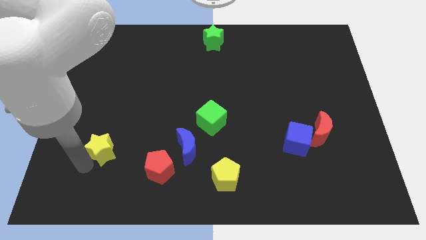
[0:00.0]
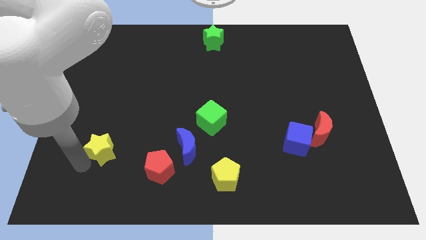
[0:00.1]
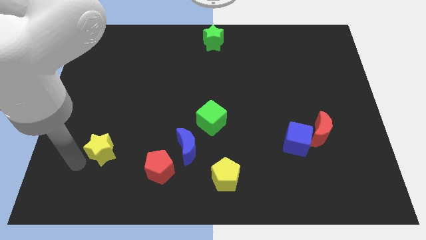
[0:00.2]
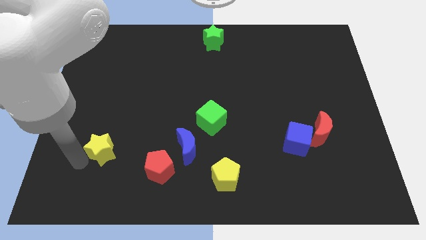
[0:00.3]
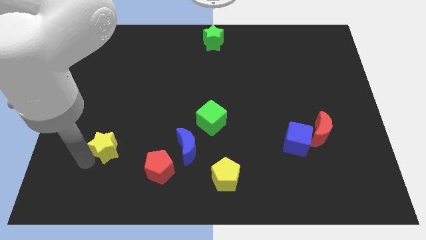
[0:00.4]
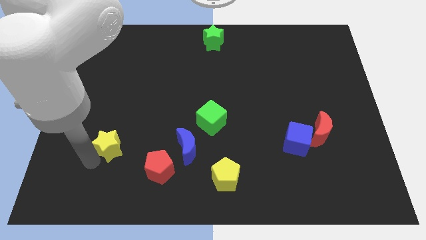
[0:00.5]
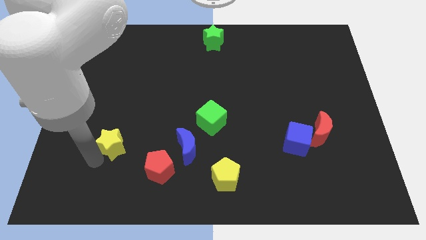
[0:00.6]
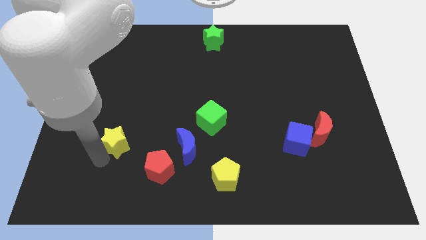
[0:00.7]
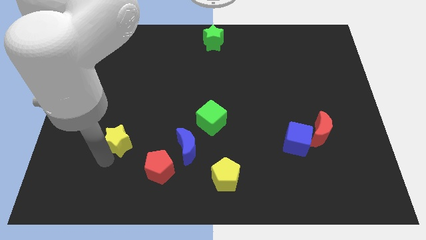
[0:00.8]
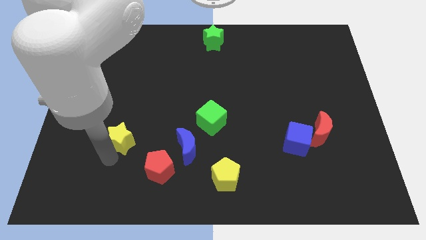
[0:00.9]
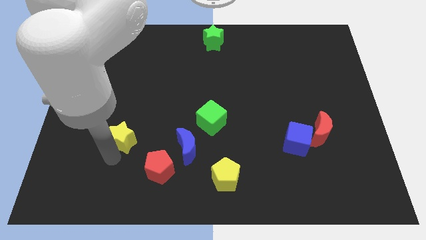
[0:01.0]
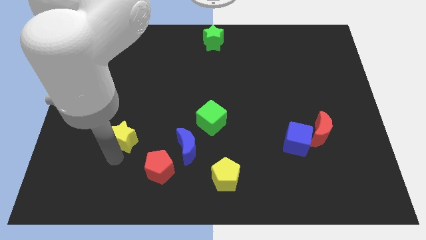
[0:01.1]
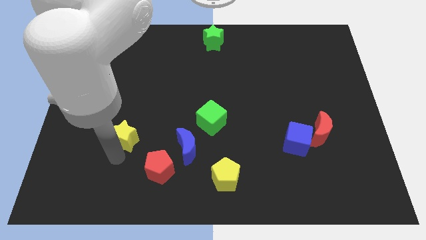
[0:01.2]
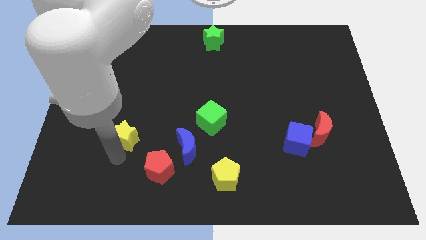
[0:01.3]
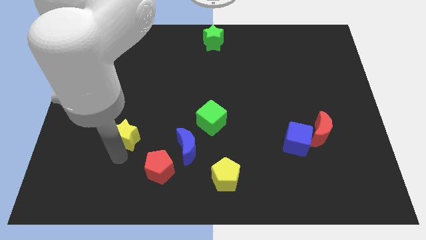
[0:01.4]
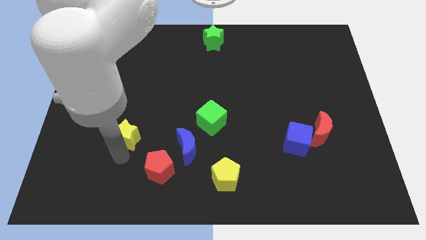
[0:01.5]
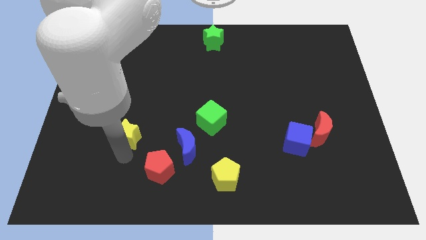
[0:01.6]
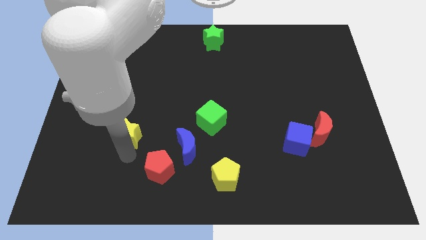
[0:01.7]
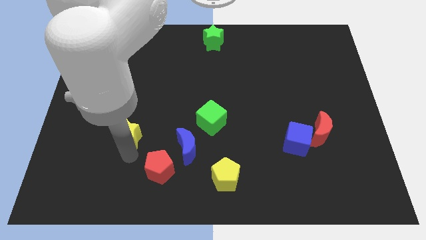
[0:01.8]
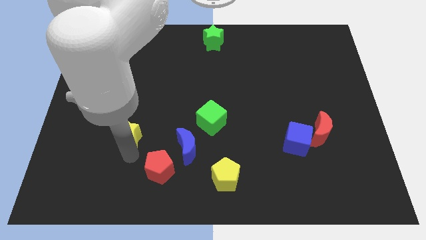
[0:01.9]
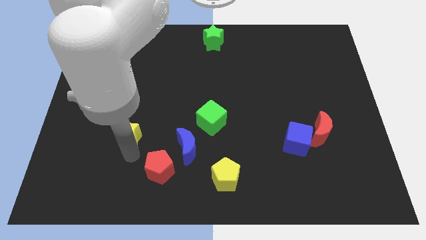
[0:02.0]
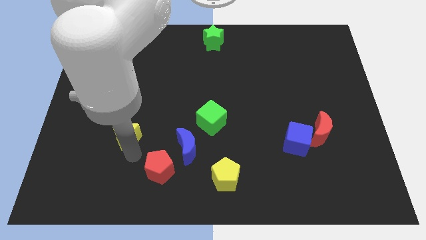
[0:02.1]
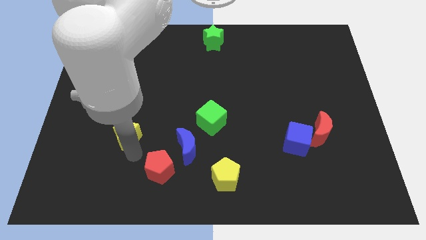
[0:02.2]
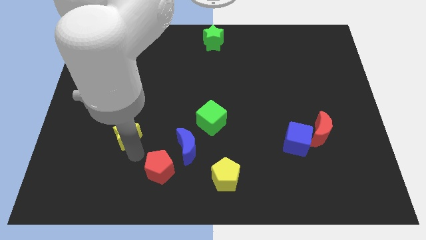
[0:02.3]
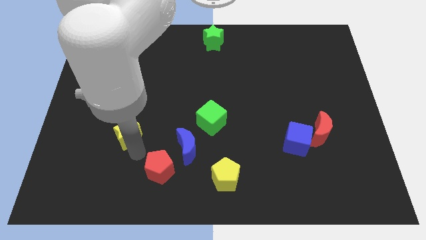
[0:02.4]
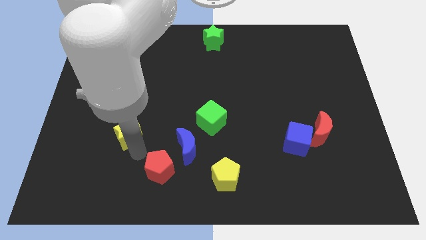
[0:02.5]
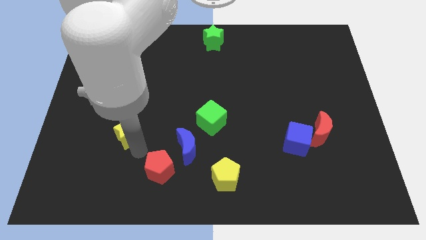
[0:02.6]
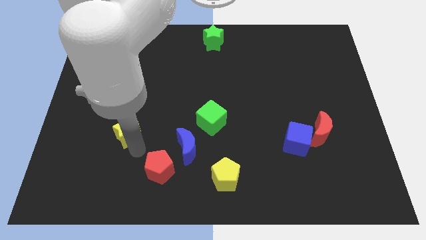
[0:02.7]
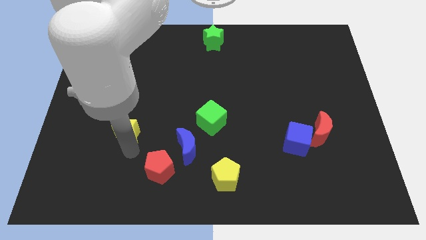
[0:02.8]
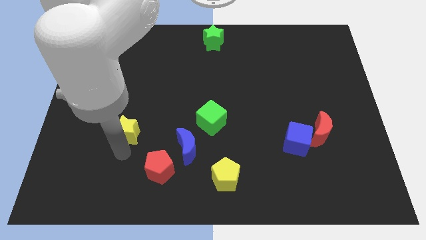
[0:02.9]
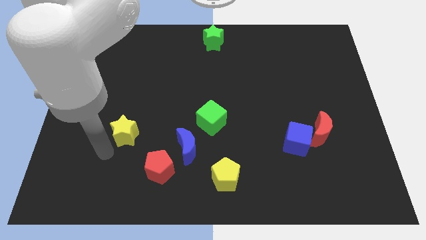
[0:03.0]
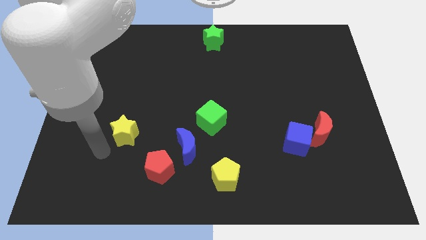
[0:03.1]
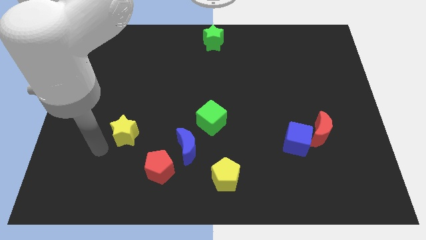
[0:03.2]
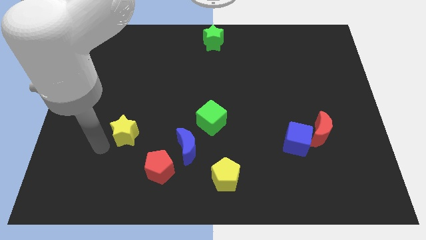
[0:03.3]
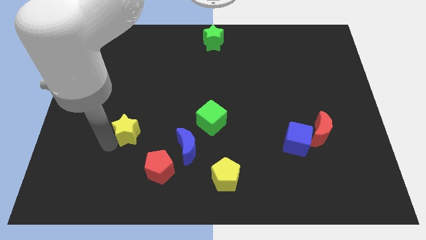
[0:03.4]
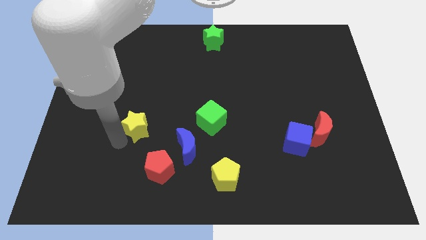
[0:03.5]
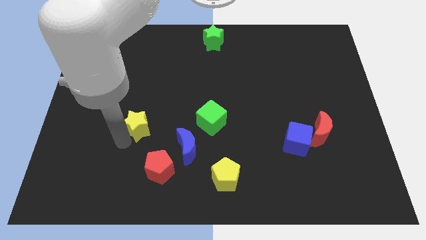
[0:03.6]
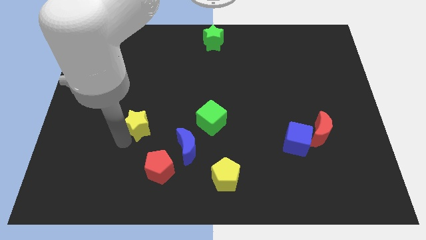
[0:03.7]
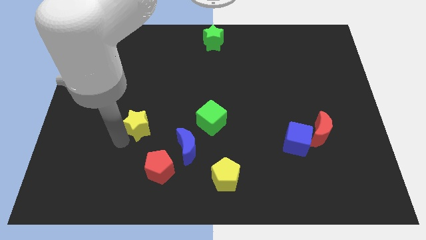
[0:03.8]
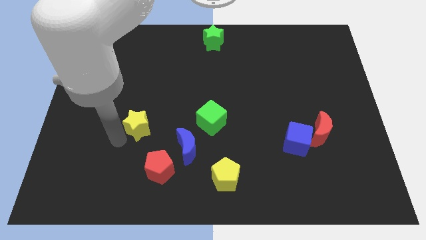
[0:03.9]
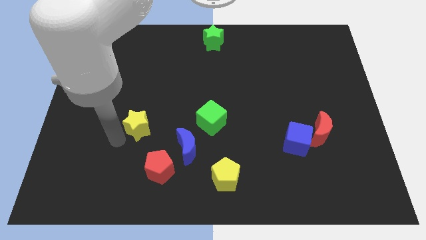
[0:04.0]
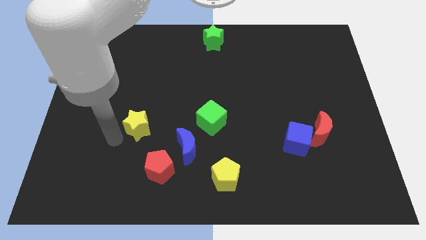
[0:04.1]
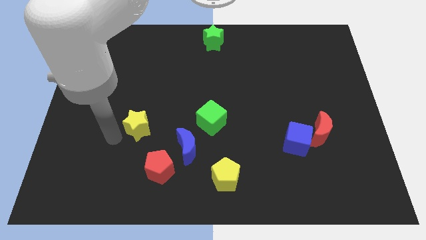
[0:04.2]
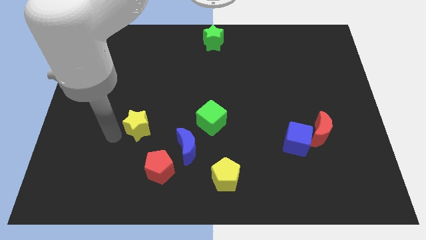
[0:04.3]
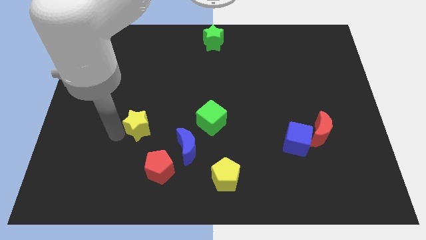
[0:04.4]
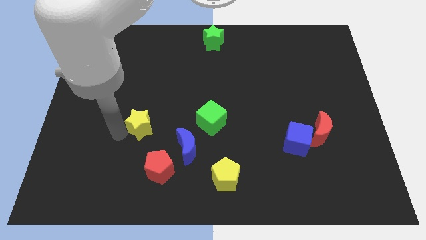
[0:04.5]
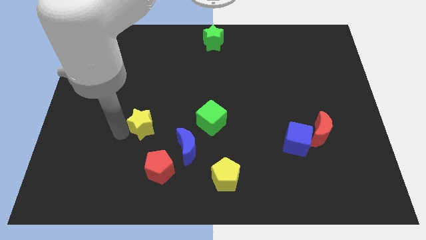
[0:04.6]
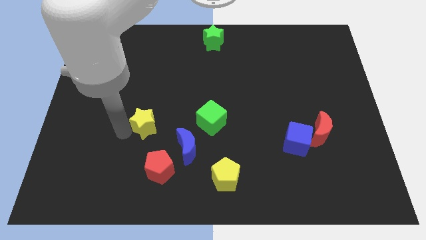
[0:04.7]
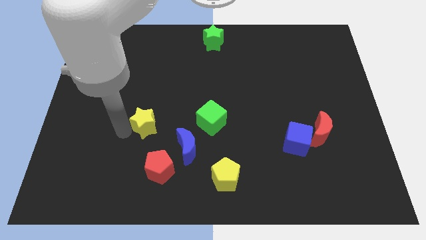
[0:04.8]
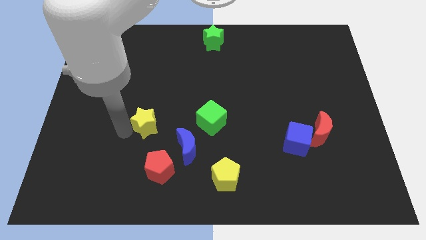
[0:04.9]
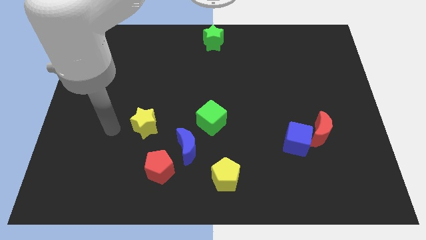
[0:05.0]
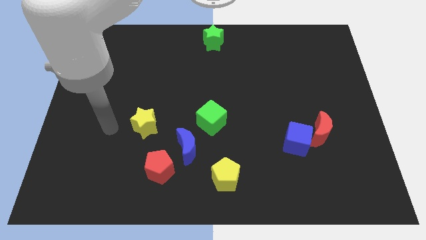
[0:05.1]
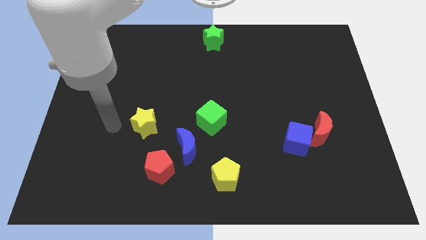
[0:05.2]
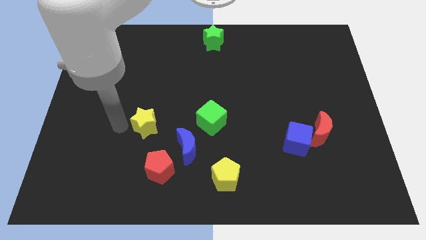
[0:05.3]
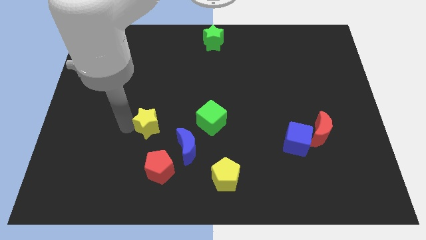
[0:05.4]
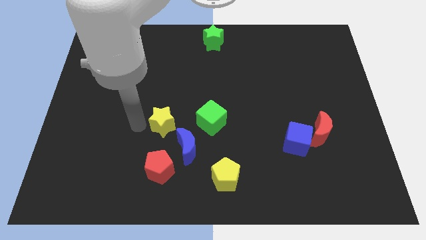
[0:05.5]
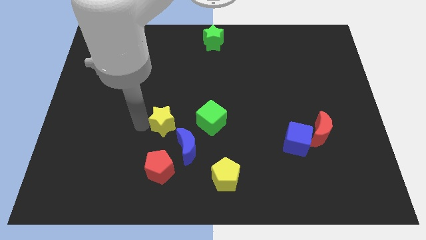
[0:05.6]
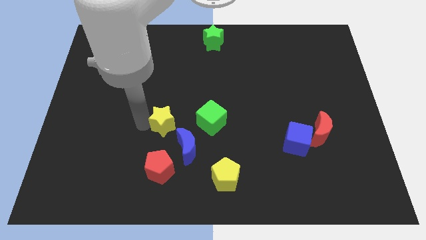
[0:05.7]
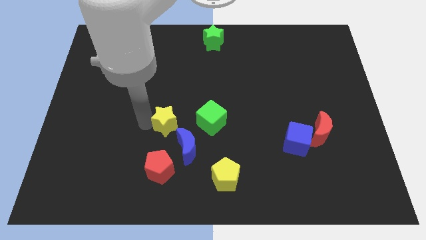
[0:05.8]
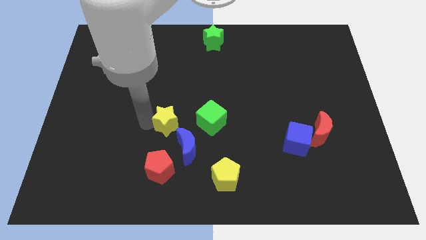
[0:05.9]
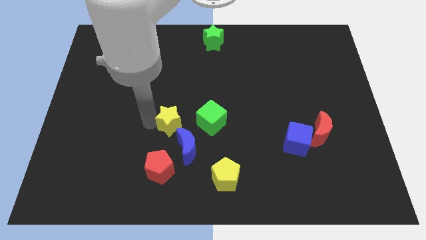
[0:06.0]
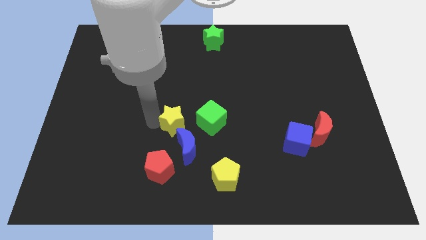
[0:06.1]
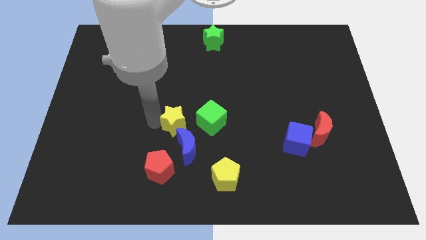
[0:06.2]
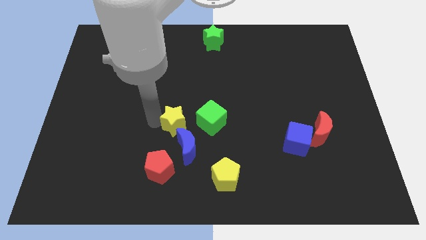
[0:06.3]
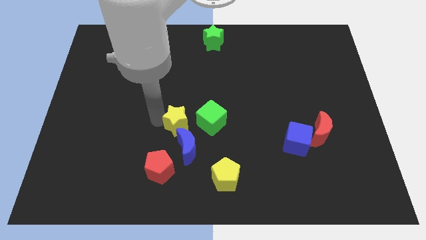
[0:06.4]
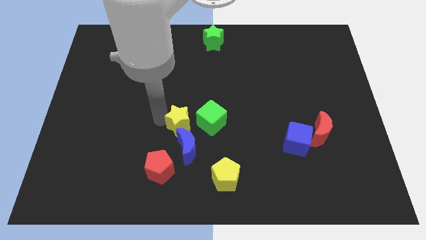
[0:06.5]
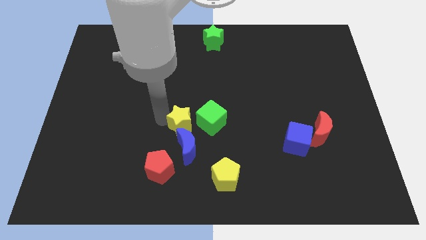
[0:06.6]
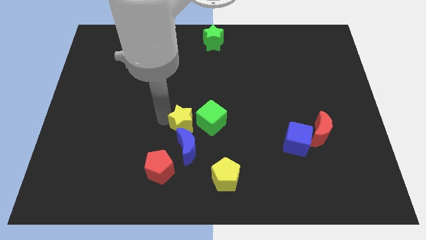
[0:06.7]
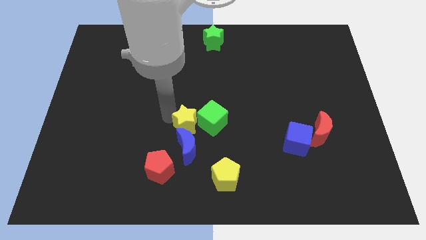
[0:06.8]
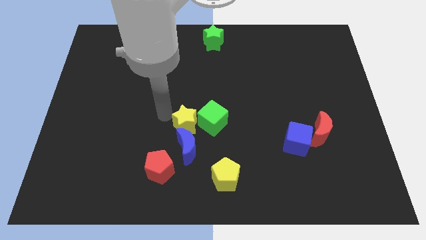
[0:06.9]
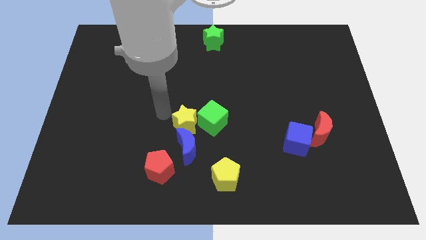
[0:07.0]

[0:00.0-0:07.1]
place the yellow star close to the green cube

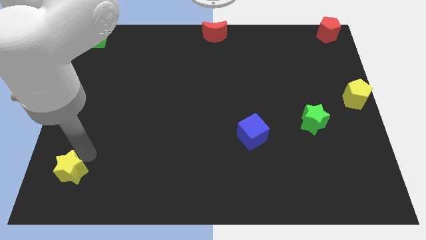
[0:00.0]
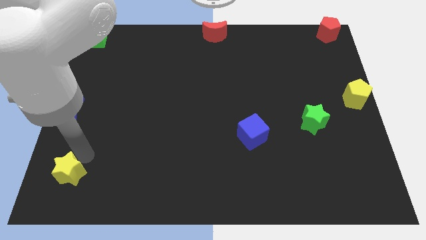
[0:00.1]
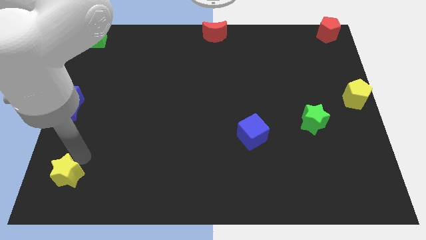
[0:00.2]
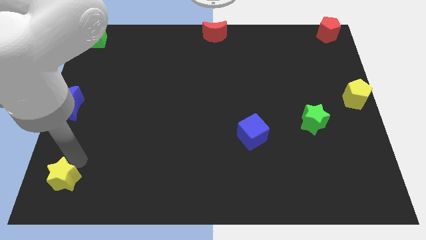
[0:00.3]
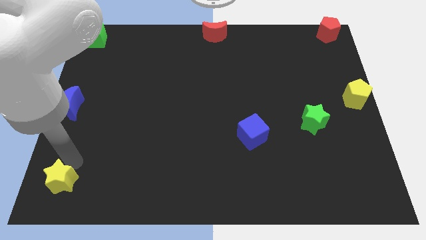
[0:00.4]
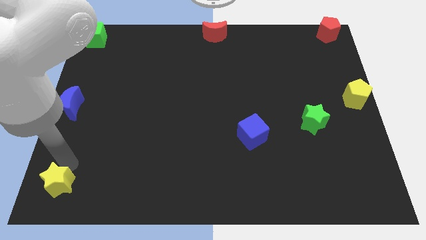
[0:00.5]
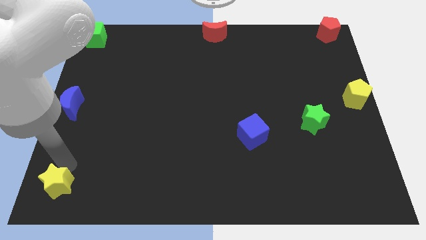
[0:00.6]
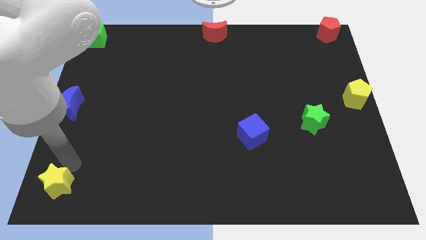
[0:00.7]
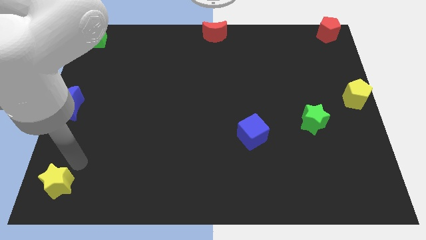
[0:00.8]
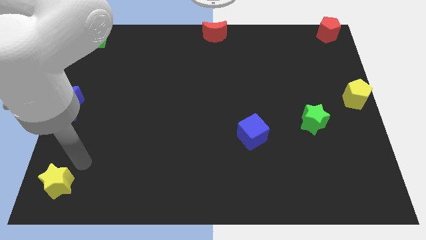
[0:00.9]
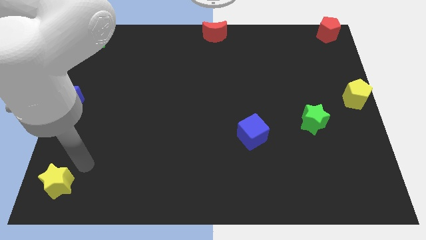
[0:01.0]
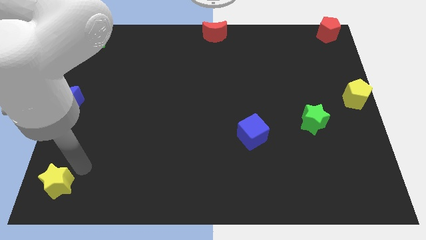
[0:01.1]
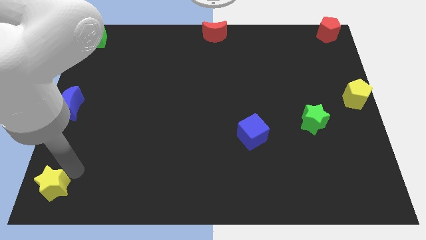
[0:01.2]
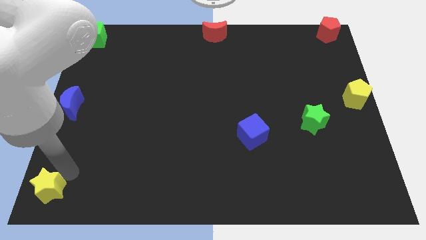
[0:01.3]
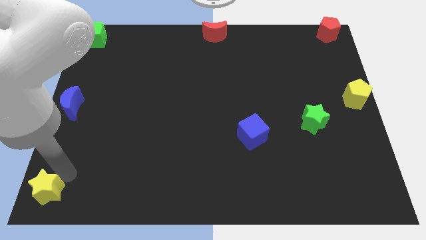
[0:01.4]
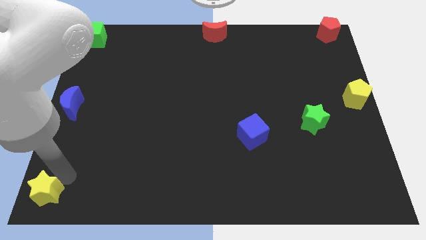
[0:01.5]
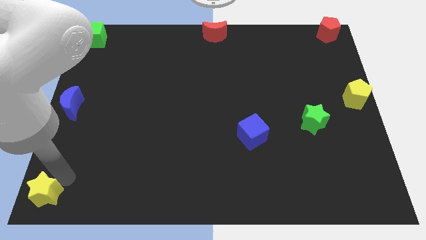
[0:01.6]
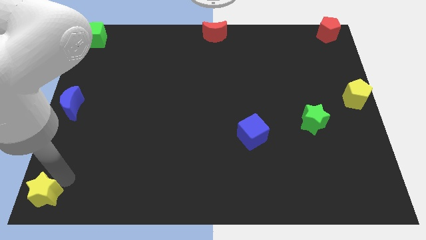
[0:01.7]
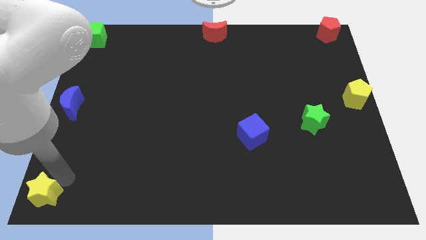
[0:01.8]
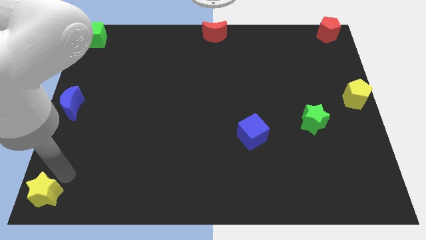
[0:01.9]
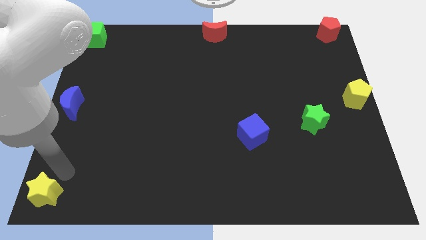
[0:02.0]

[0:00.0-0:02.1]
place the yellow star at the bottom left corner
